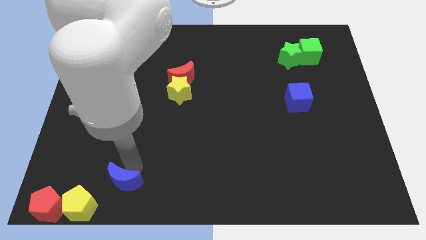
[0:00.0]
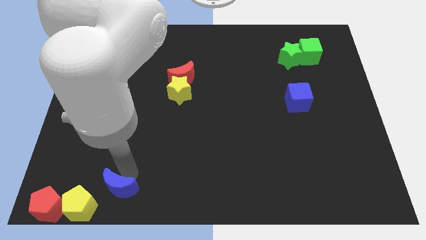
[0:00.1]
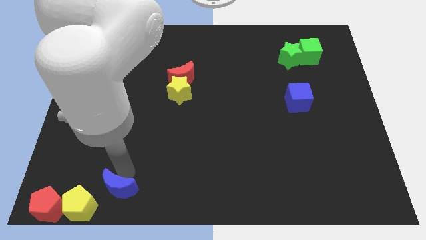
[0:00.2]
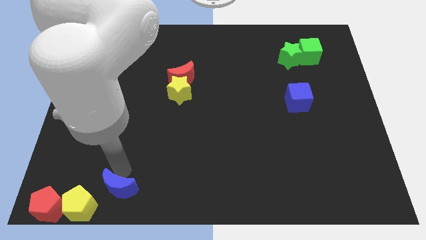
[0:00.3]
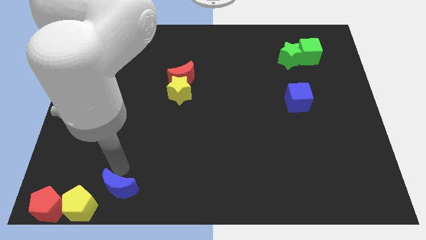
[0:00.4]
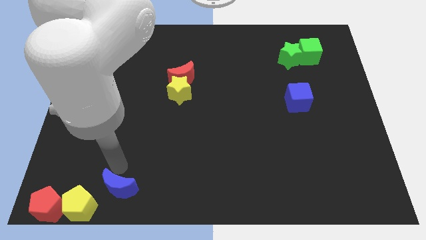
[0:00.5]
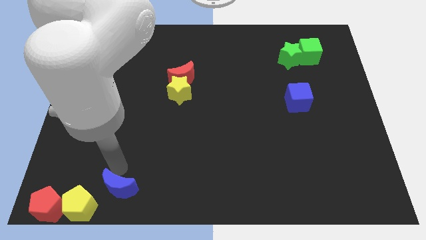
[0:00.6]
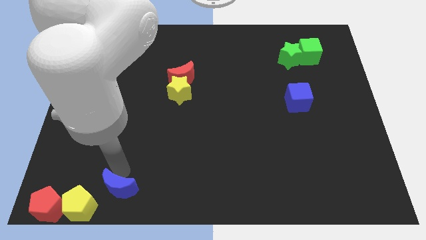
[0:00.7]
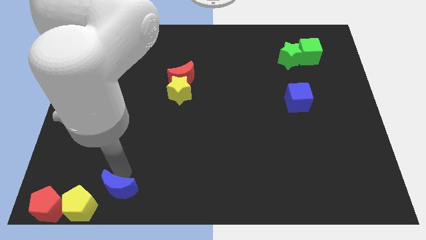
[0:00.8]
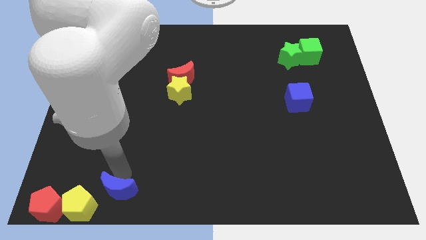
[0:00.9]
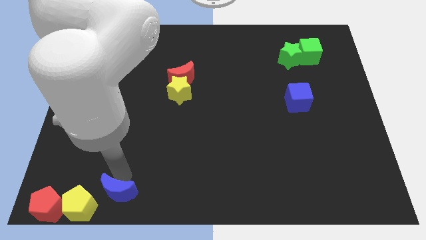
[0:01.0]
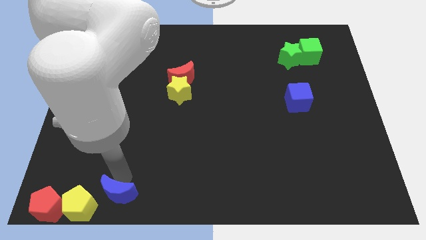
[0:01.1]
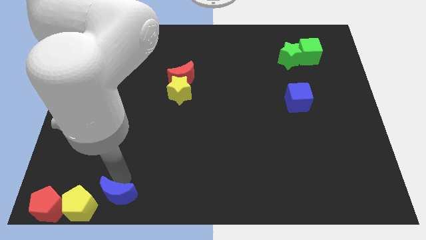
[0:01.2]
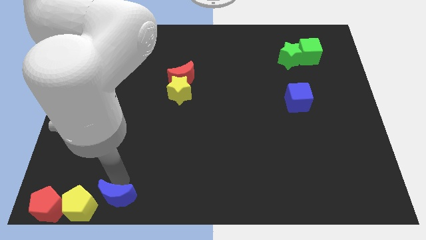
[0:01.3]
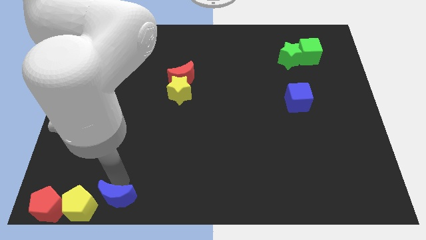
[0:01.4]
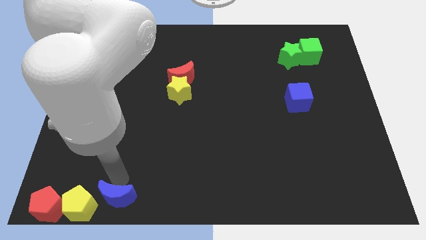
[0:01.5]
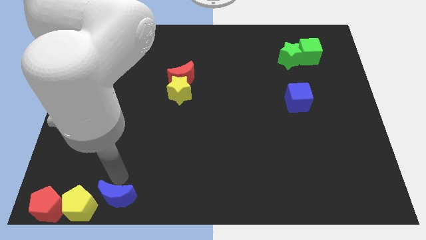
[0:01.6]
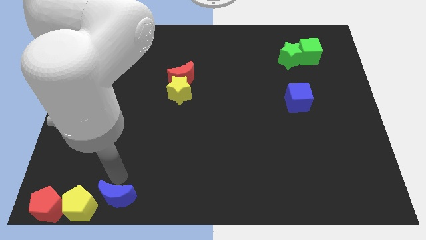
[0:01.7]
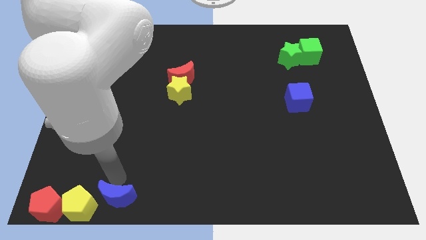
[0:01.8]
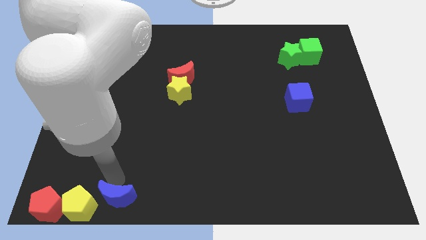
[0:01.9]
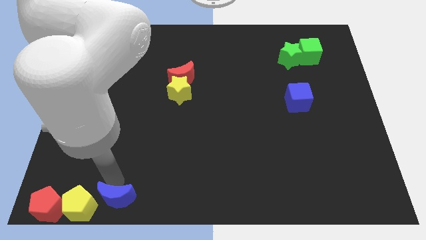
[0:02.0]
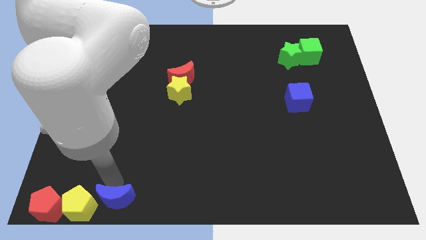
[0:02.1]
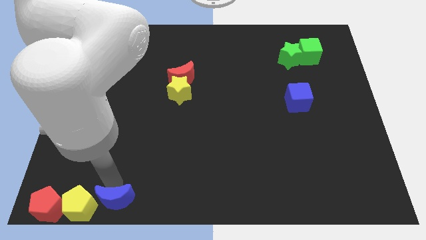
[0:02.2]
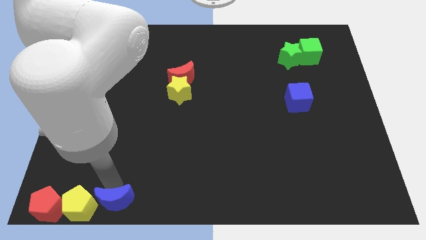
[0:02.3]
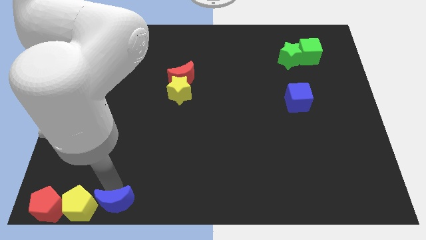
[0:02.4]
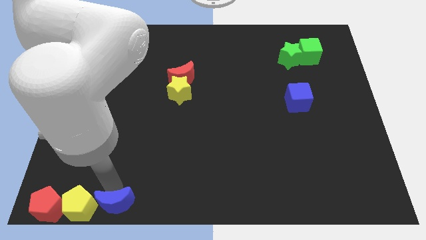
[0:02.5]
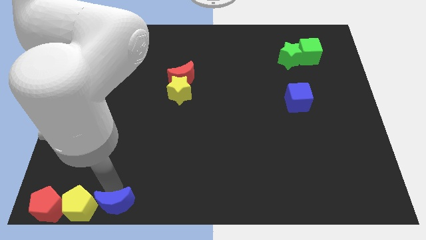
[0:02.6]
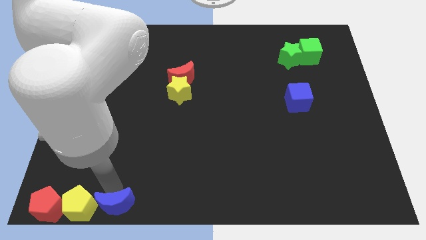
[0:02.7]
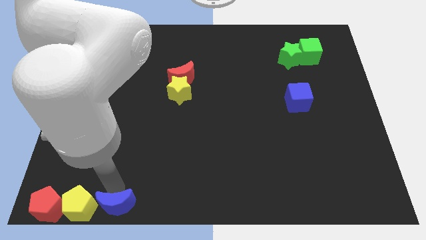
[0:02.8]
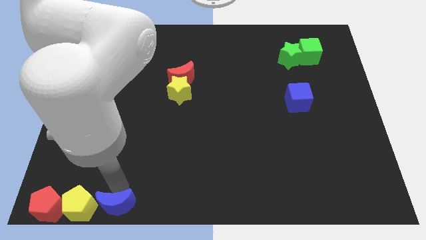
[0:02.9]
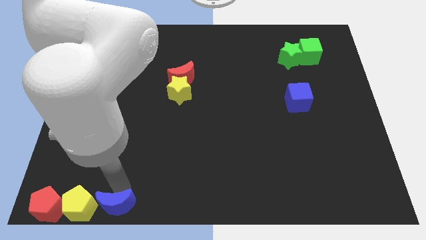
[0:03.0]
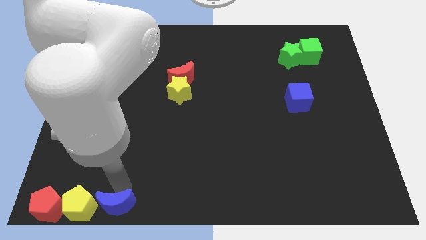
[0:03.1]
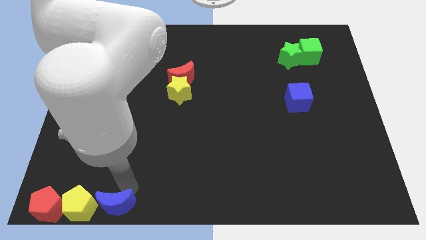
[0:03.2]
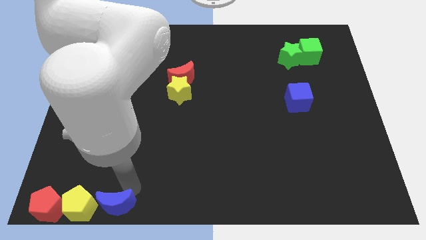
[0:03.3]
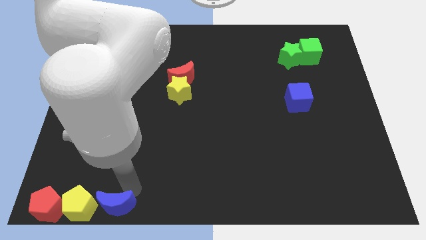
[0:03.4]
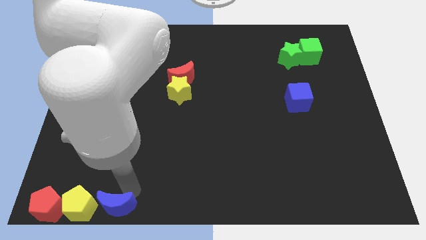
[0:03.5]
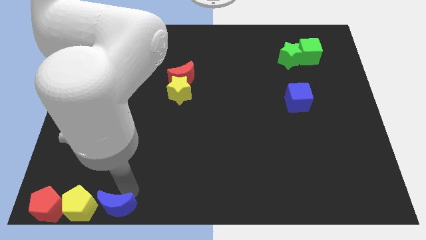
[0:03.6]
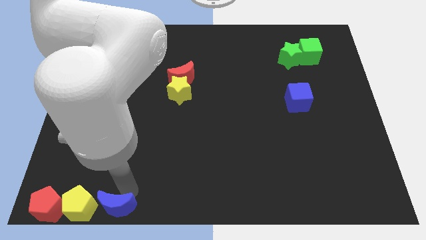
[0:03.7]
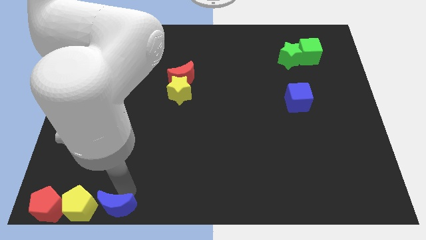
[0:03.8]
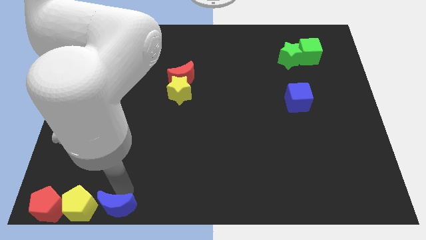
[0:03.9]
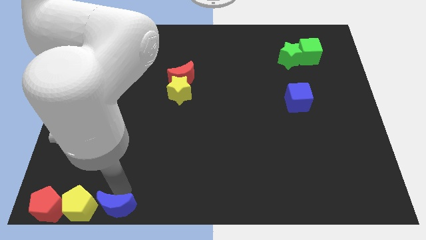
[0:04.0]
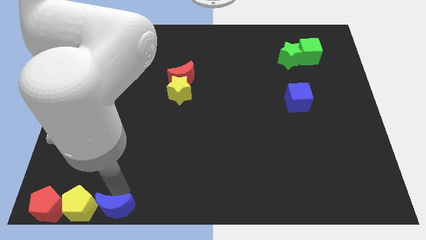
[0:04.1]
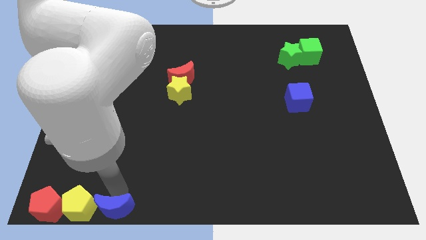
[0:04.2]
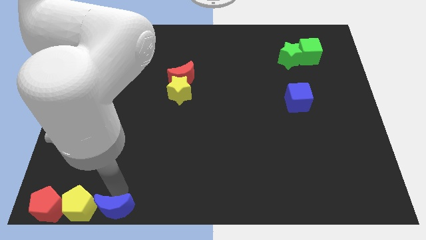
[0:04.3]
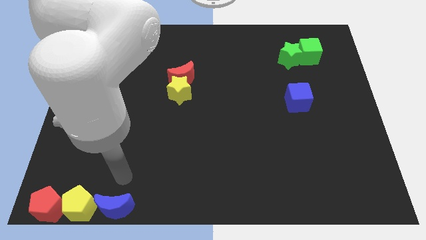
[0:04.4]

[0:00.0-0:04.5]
push the blue moon right of the yellow pentagon

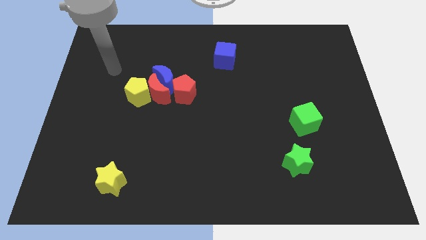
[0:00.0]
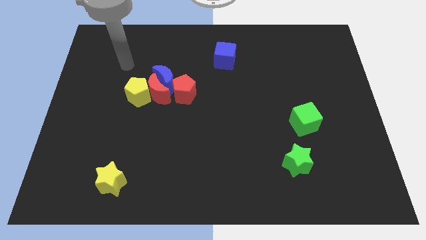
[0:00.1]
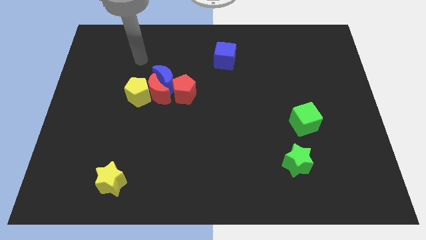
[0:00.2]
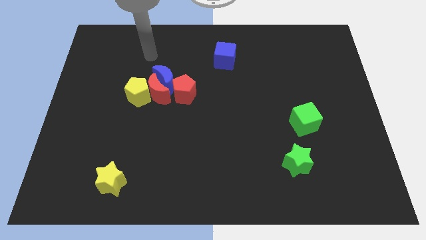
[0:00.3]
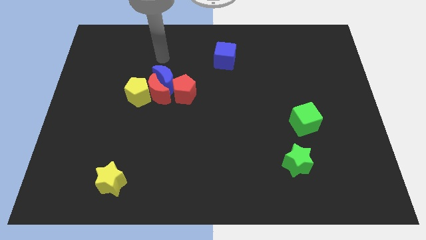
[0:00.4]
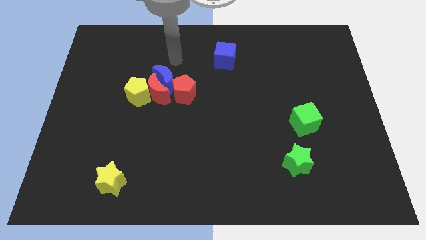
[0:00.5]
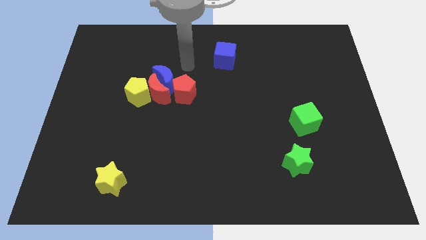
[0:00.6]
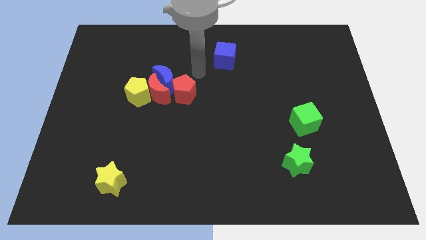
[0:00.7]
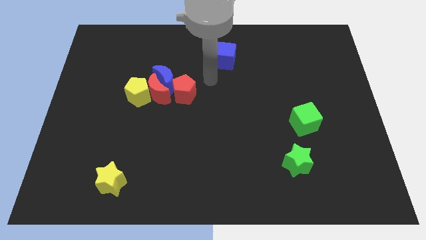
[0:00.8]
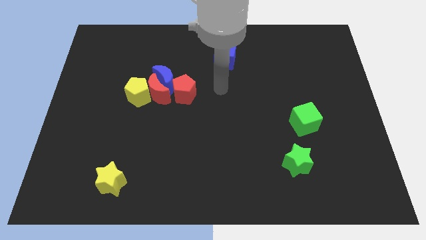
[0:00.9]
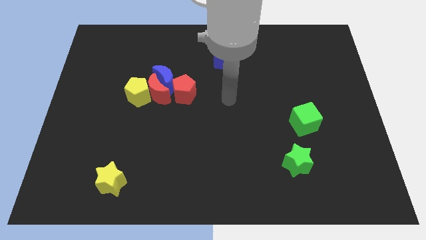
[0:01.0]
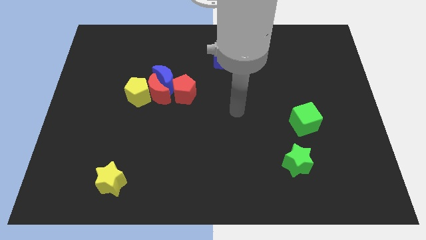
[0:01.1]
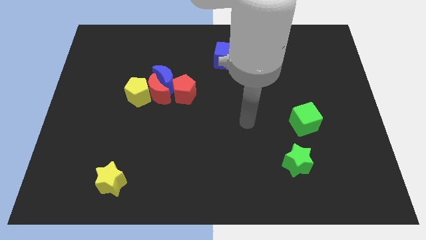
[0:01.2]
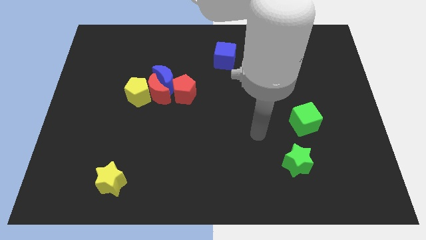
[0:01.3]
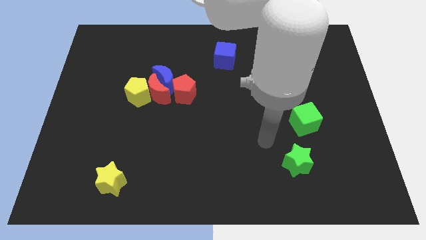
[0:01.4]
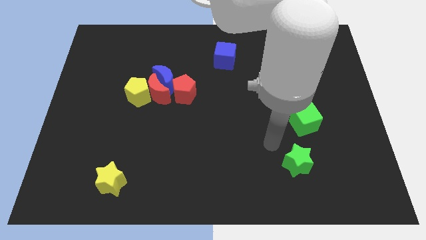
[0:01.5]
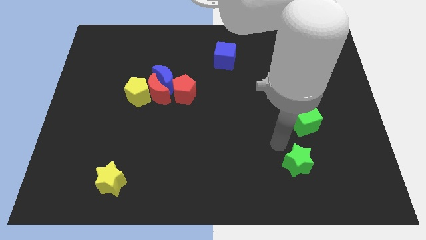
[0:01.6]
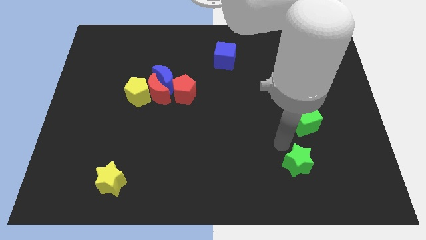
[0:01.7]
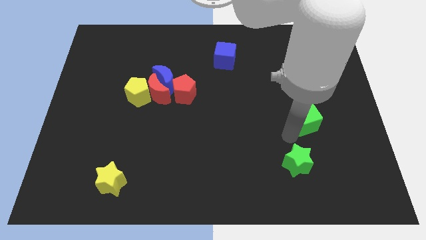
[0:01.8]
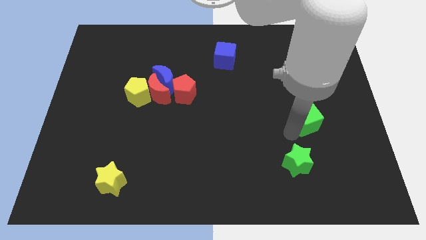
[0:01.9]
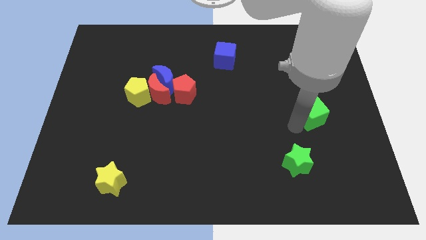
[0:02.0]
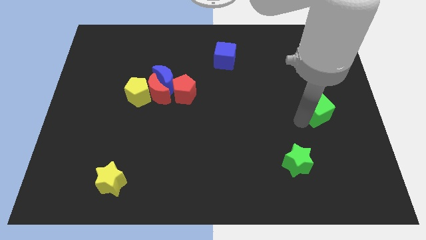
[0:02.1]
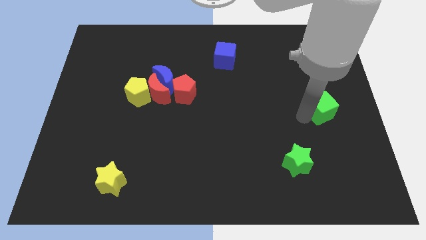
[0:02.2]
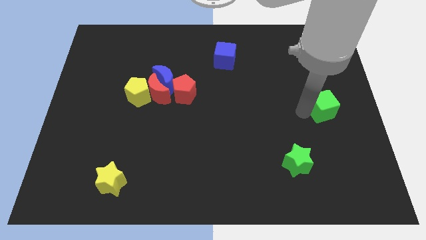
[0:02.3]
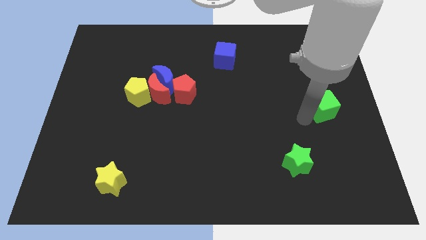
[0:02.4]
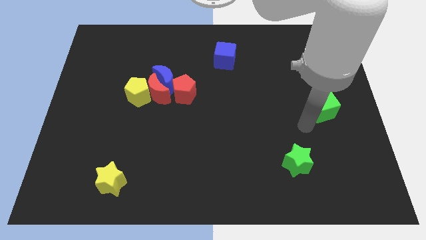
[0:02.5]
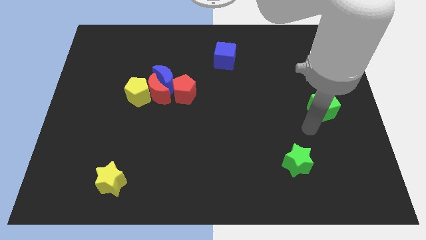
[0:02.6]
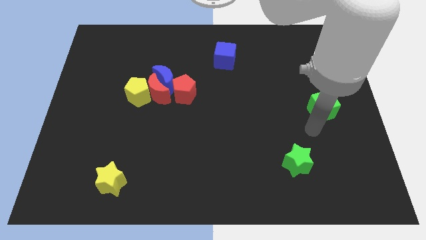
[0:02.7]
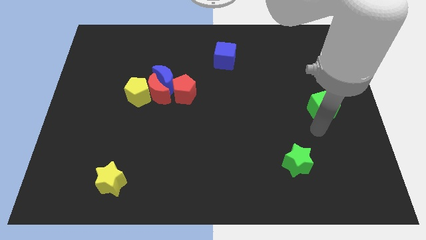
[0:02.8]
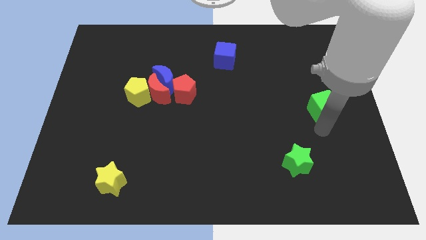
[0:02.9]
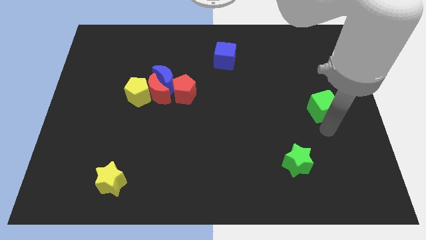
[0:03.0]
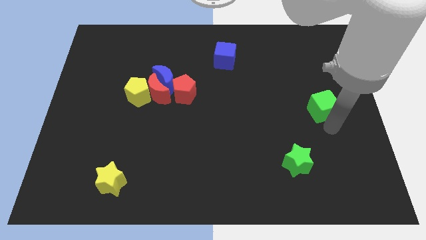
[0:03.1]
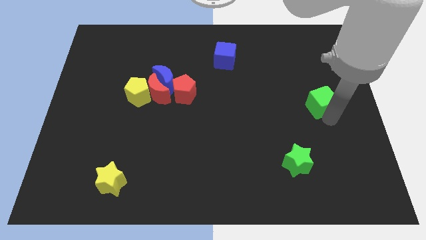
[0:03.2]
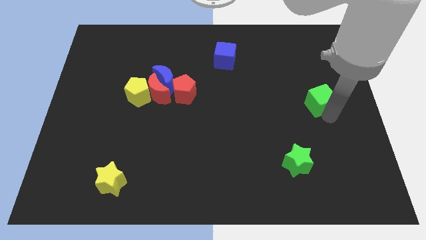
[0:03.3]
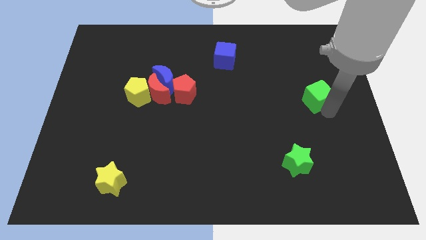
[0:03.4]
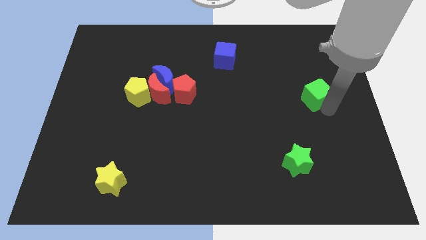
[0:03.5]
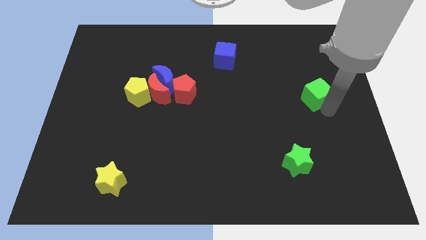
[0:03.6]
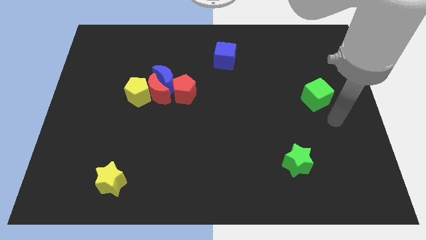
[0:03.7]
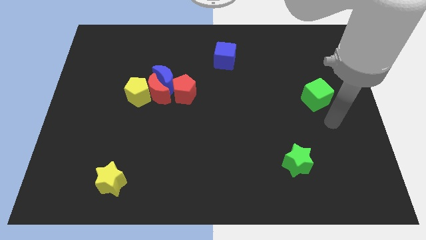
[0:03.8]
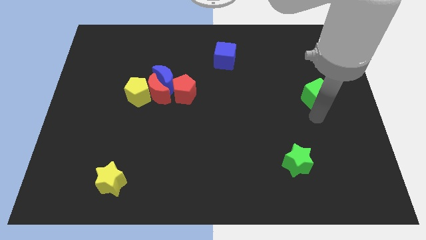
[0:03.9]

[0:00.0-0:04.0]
move your arm towards the bottom of the green cube

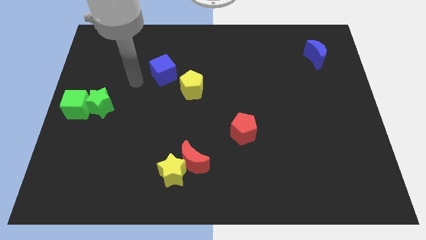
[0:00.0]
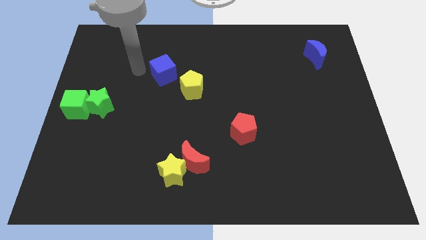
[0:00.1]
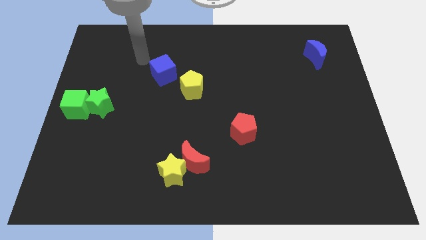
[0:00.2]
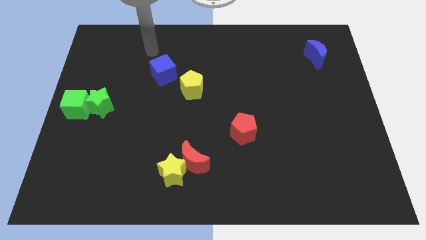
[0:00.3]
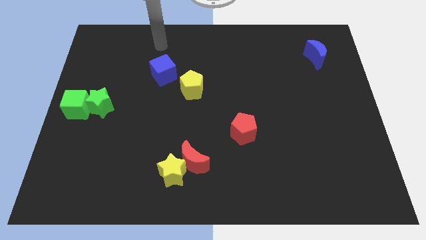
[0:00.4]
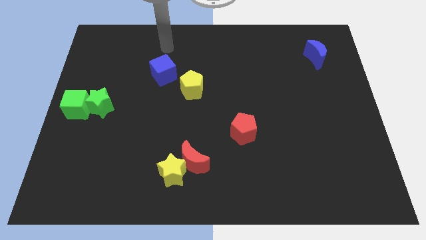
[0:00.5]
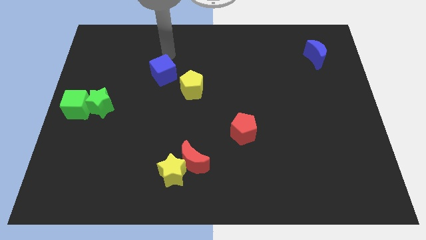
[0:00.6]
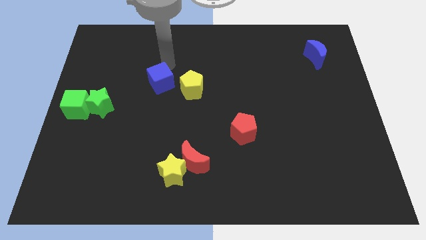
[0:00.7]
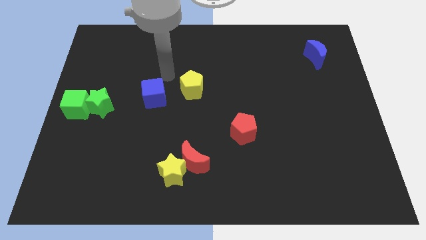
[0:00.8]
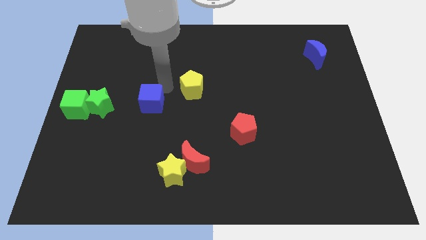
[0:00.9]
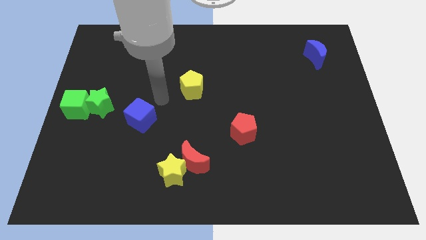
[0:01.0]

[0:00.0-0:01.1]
move the blue cube to the right of the green star
